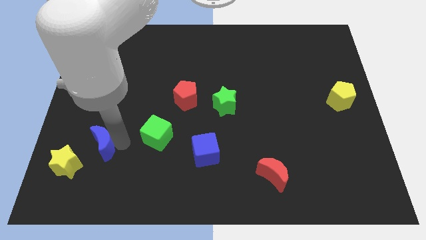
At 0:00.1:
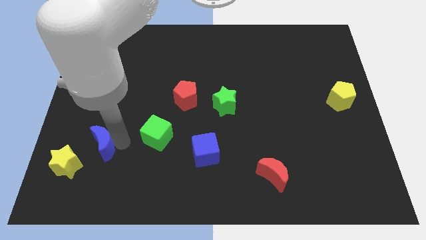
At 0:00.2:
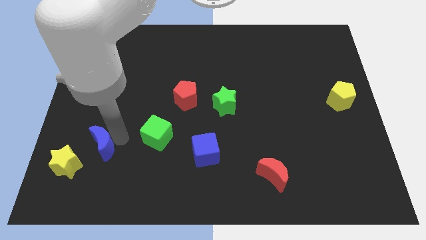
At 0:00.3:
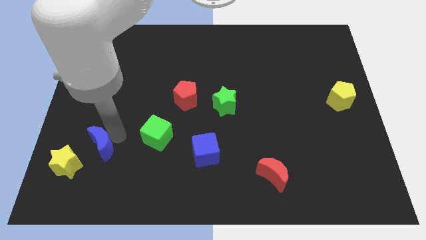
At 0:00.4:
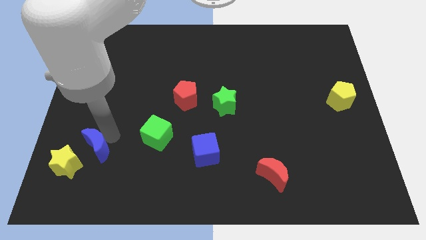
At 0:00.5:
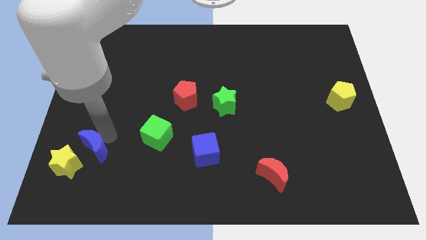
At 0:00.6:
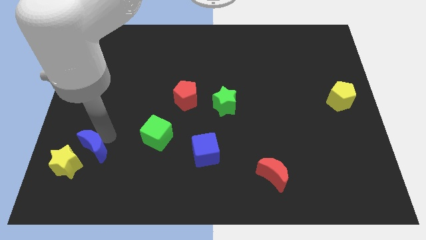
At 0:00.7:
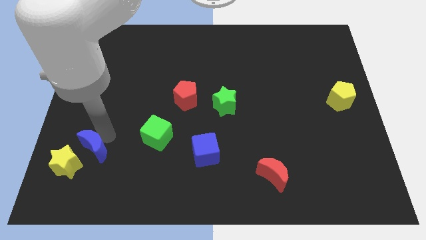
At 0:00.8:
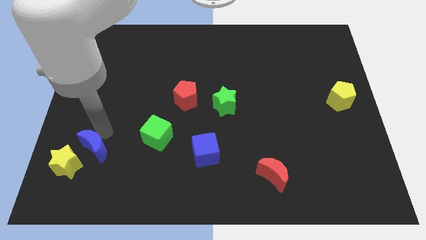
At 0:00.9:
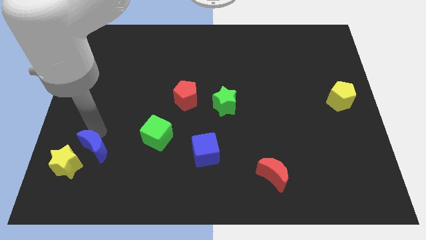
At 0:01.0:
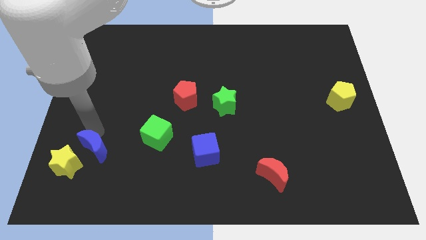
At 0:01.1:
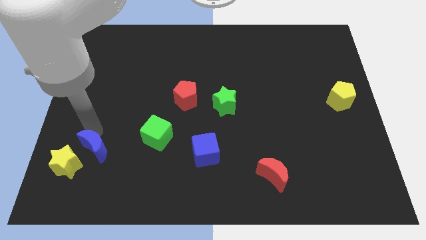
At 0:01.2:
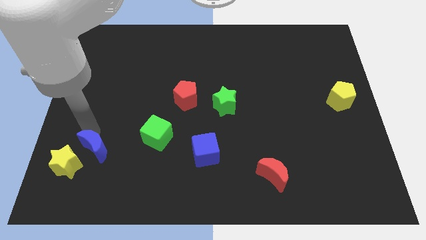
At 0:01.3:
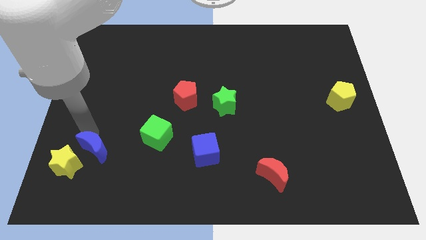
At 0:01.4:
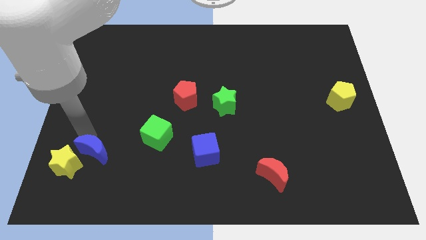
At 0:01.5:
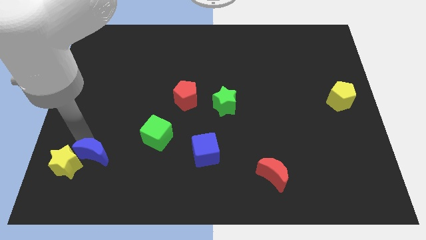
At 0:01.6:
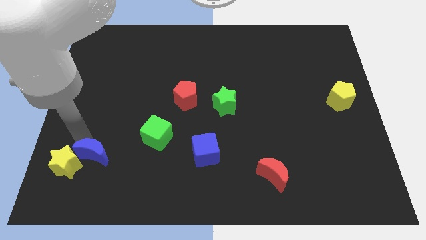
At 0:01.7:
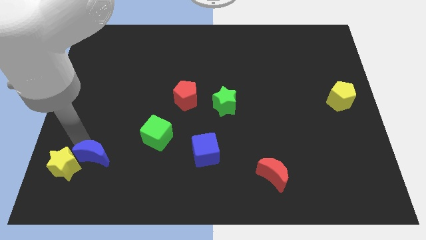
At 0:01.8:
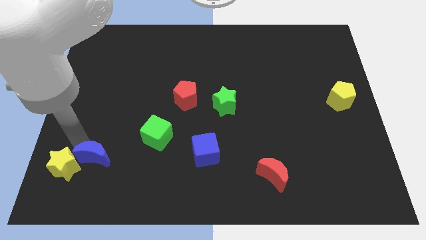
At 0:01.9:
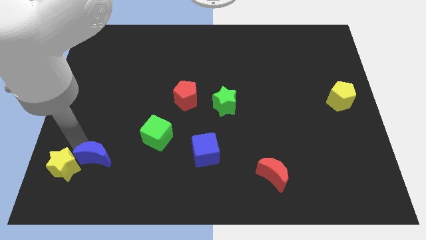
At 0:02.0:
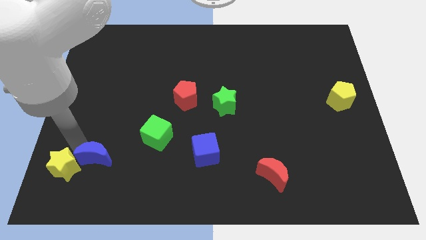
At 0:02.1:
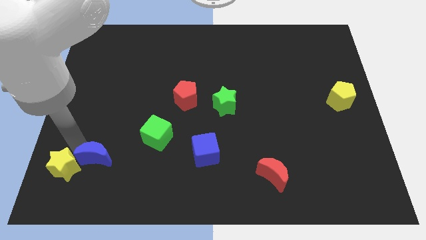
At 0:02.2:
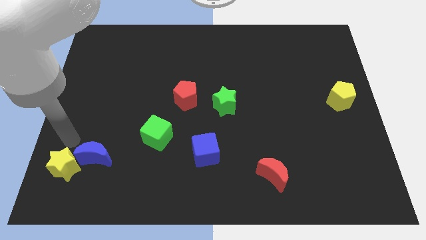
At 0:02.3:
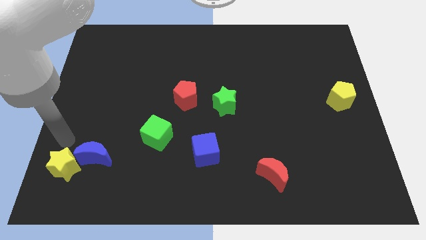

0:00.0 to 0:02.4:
turn the blue moon diagonally above the yellow star

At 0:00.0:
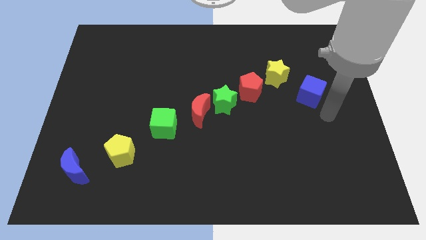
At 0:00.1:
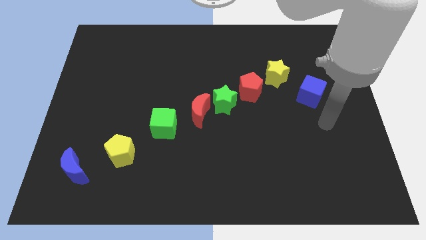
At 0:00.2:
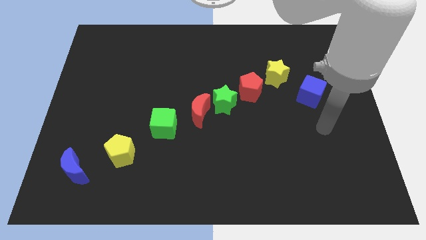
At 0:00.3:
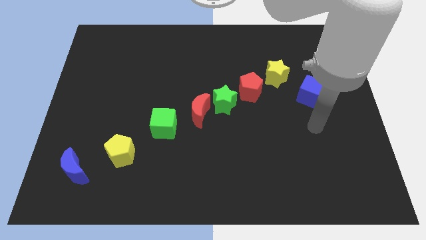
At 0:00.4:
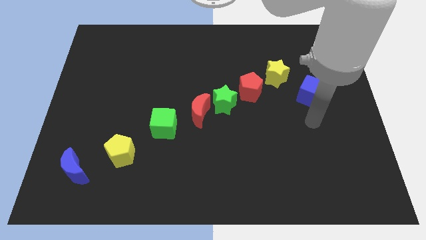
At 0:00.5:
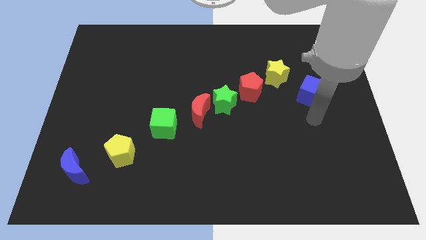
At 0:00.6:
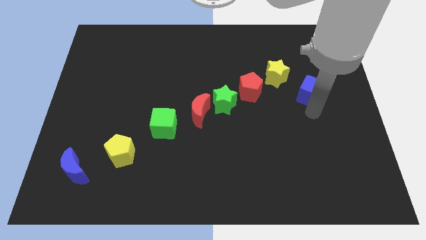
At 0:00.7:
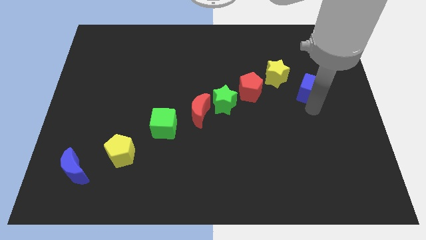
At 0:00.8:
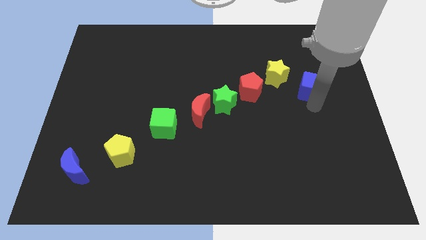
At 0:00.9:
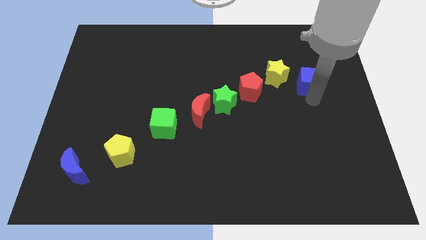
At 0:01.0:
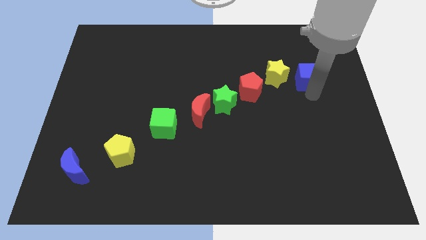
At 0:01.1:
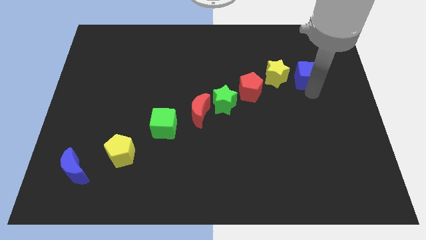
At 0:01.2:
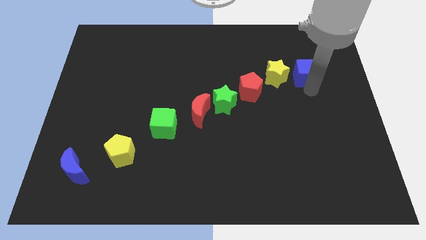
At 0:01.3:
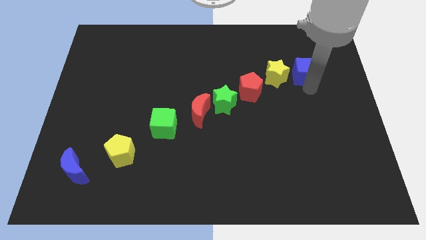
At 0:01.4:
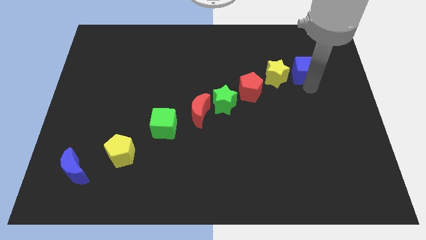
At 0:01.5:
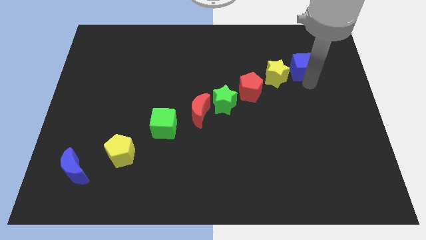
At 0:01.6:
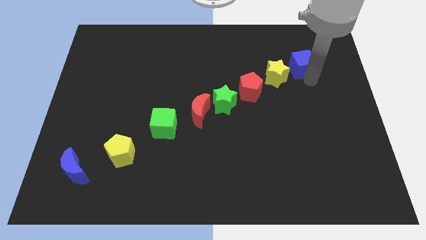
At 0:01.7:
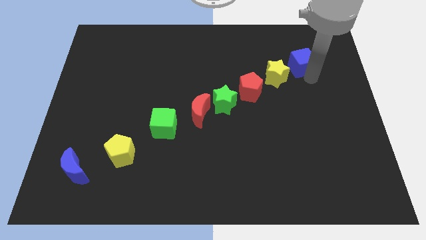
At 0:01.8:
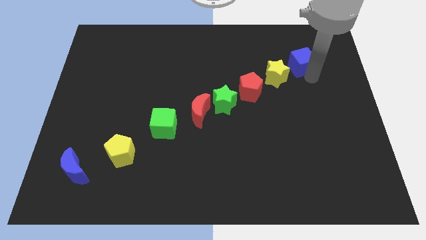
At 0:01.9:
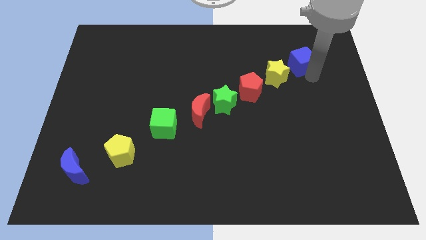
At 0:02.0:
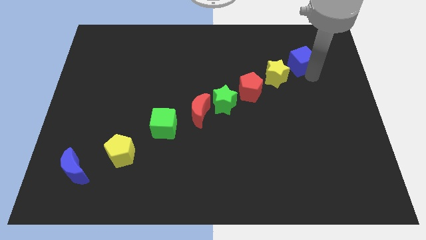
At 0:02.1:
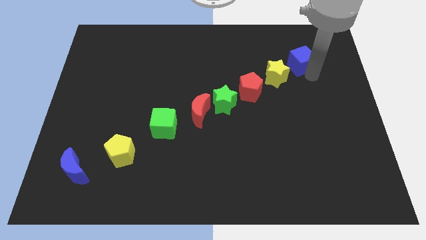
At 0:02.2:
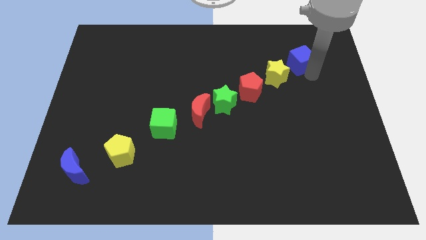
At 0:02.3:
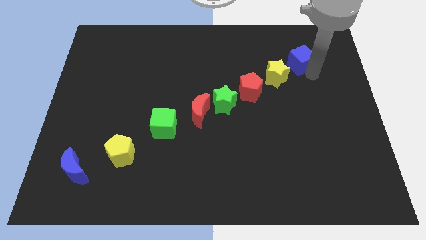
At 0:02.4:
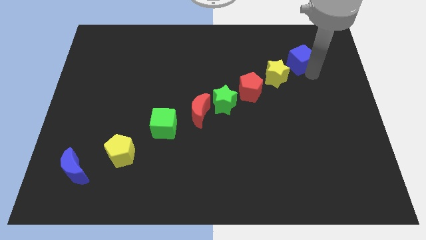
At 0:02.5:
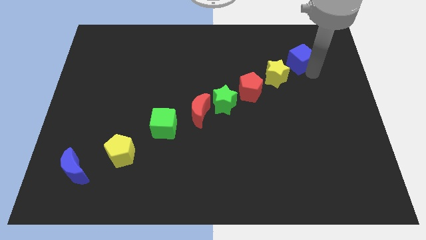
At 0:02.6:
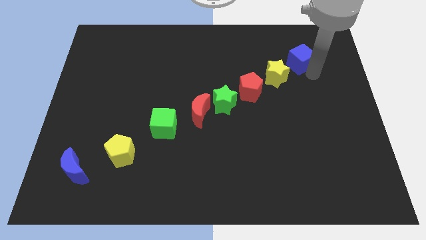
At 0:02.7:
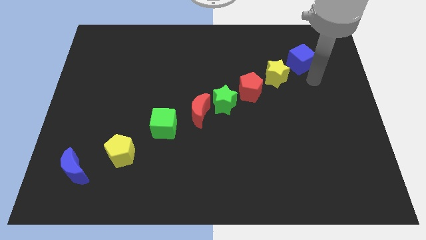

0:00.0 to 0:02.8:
move the blue cube diagonally upwards to the yellow star

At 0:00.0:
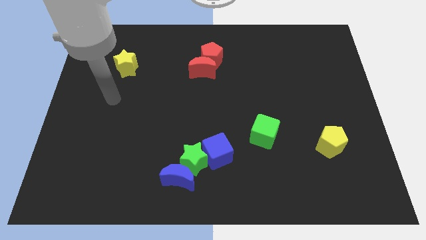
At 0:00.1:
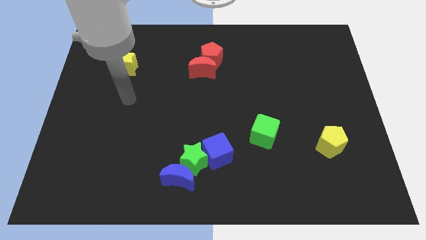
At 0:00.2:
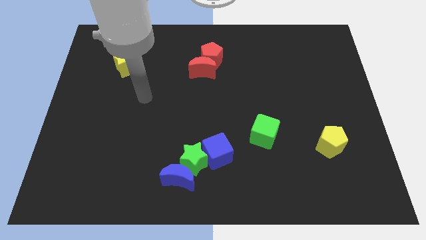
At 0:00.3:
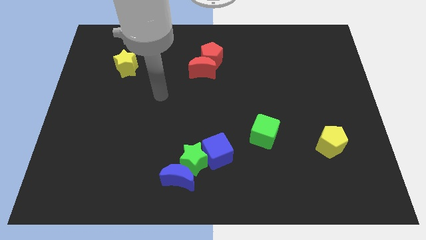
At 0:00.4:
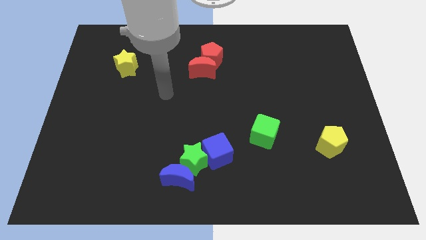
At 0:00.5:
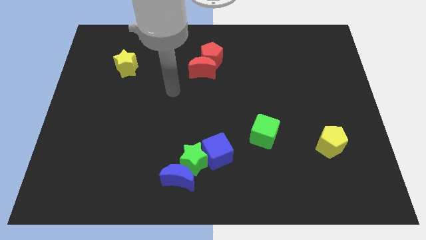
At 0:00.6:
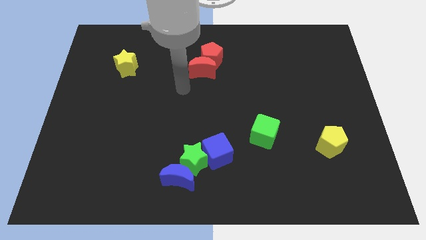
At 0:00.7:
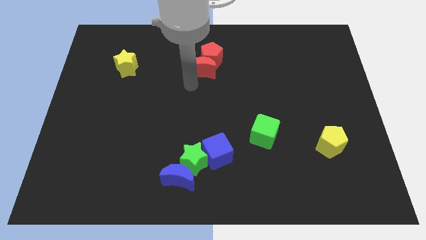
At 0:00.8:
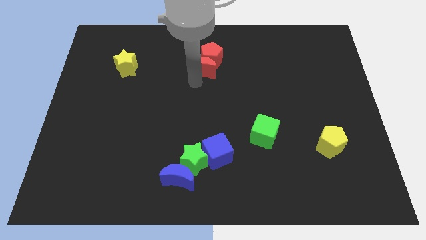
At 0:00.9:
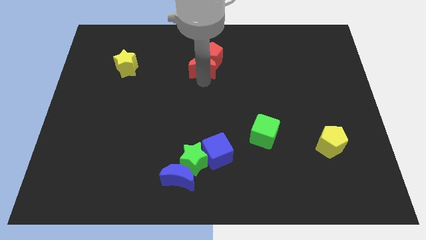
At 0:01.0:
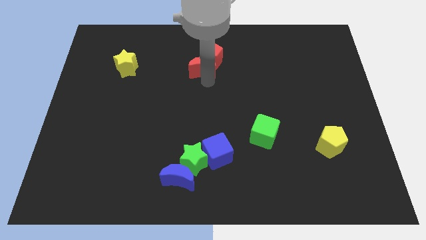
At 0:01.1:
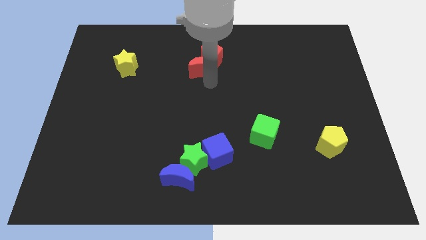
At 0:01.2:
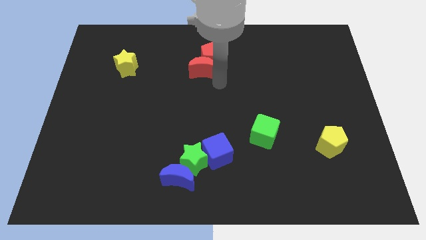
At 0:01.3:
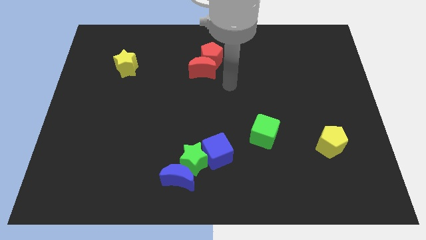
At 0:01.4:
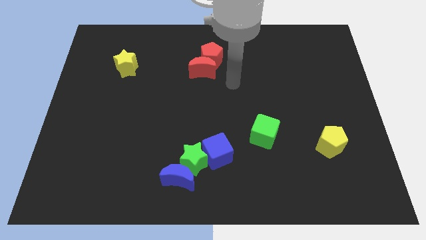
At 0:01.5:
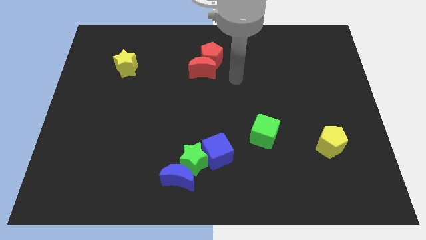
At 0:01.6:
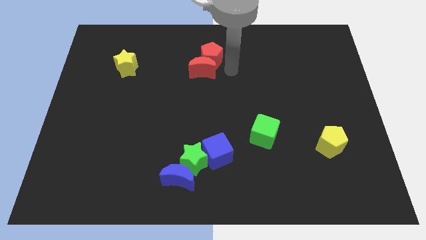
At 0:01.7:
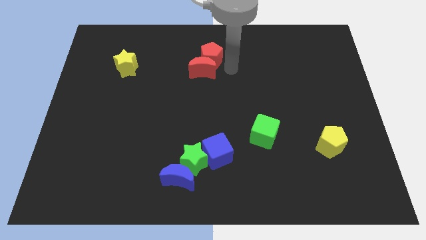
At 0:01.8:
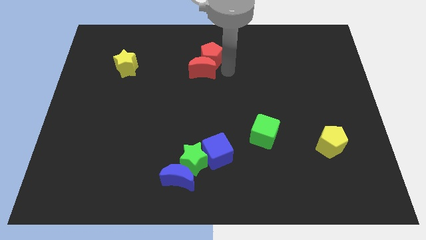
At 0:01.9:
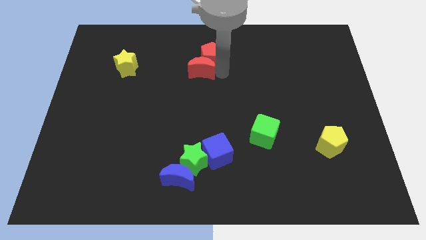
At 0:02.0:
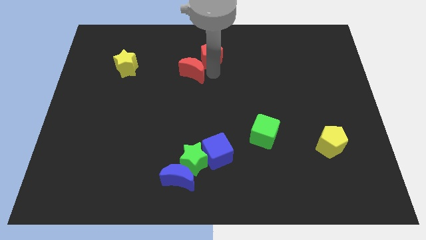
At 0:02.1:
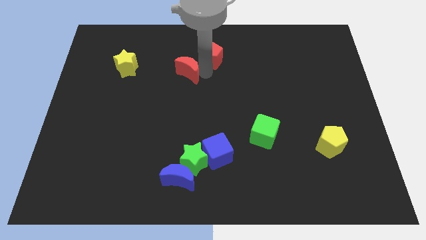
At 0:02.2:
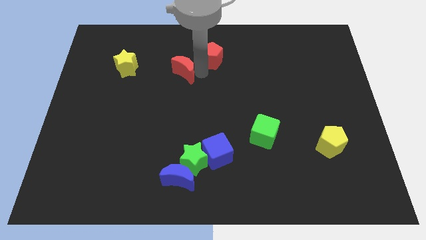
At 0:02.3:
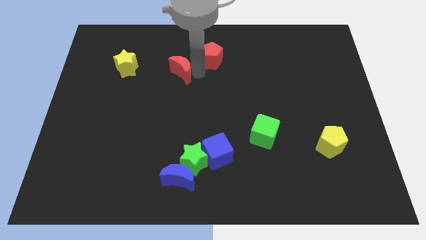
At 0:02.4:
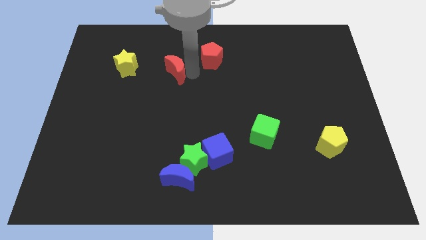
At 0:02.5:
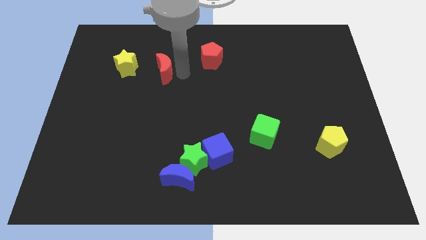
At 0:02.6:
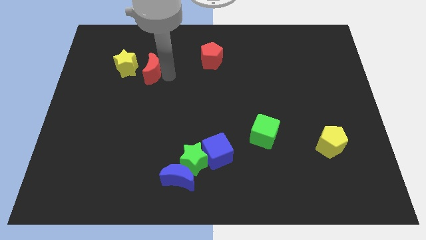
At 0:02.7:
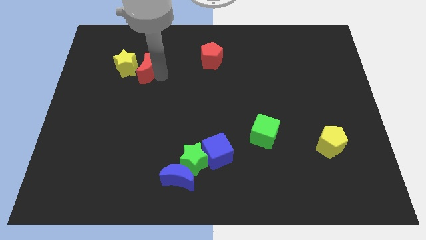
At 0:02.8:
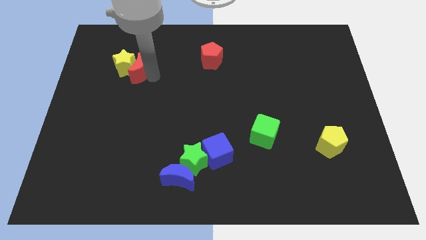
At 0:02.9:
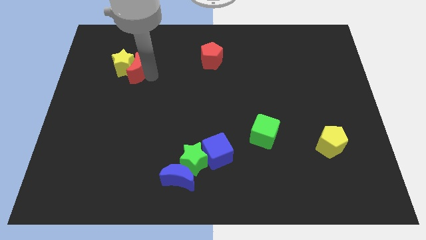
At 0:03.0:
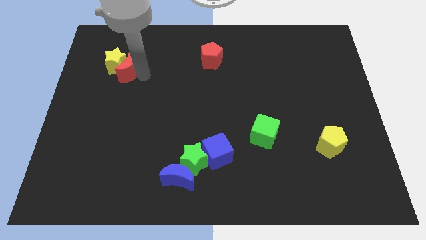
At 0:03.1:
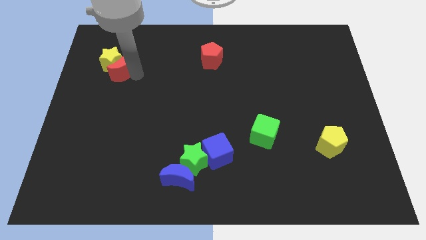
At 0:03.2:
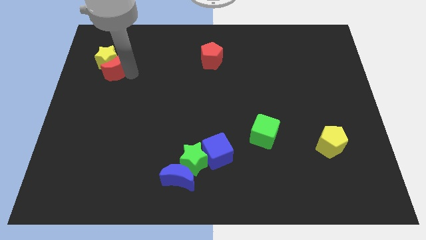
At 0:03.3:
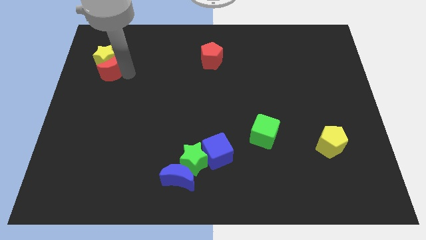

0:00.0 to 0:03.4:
separate red moon from the red pentagon

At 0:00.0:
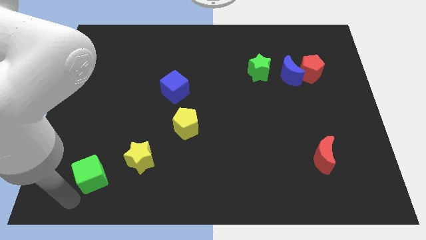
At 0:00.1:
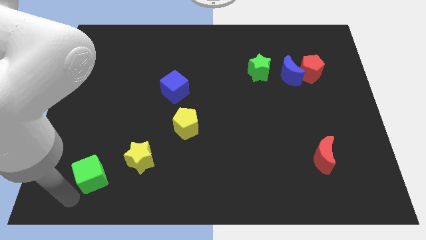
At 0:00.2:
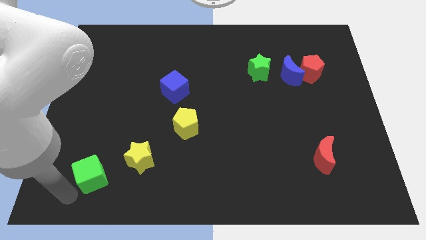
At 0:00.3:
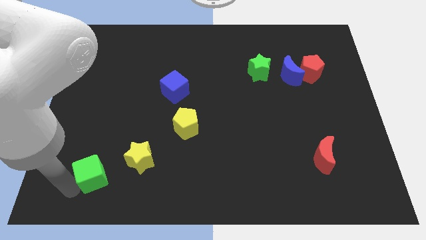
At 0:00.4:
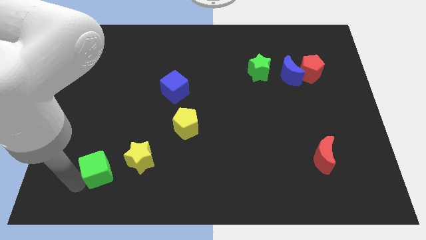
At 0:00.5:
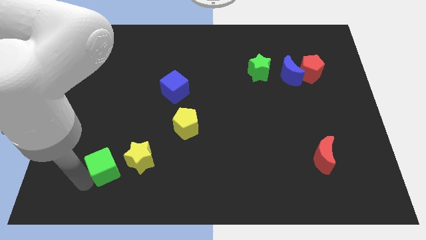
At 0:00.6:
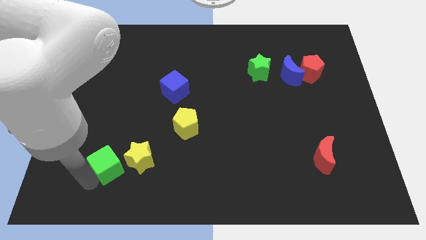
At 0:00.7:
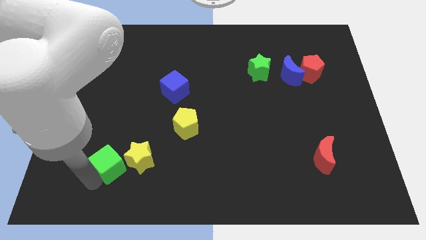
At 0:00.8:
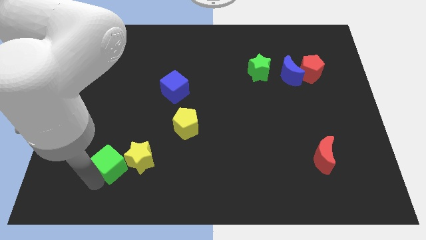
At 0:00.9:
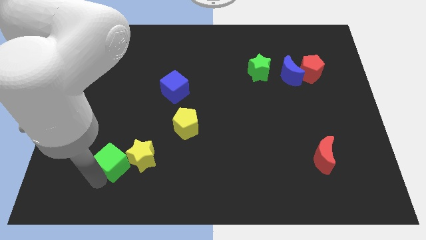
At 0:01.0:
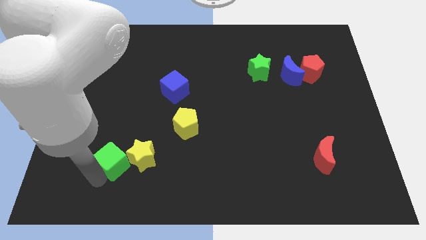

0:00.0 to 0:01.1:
push the green cube left to the yellow star
